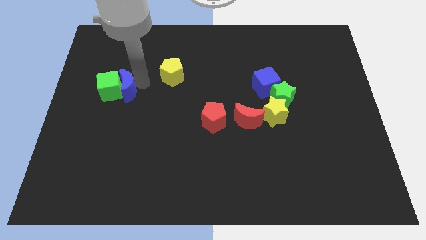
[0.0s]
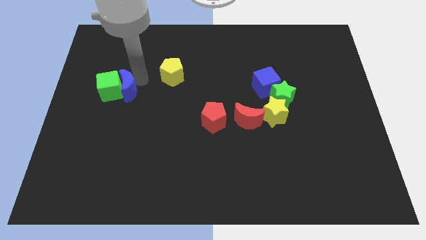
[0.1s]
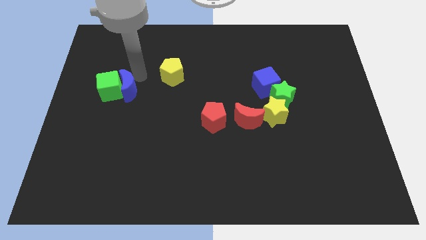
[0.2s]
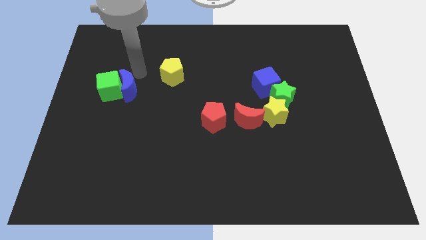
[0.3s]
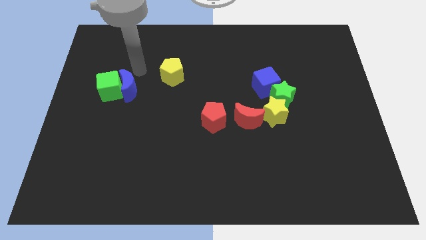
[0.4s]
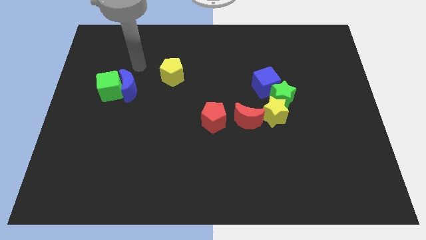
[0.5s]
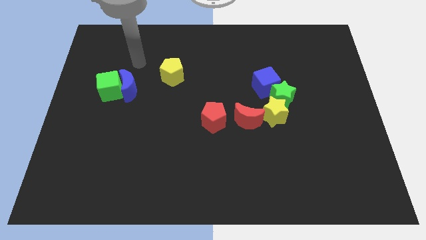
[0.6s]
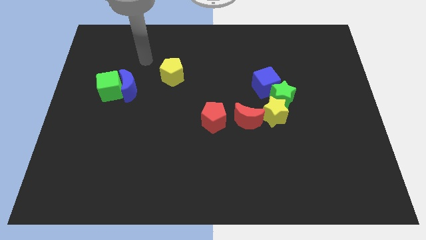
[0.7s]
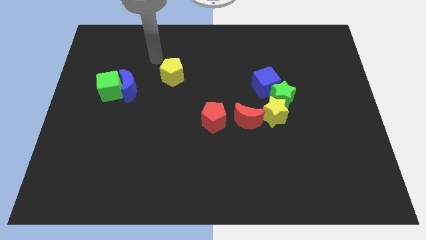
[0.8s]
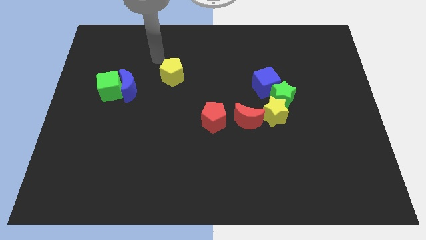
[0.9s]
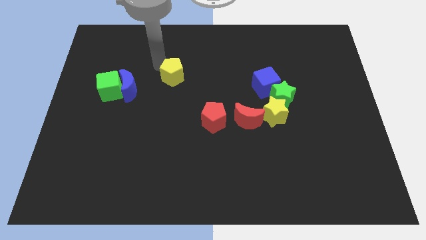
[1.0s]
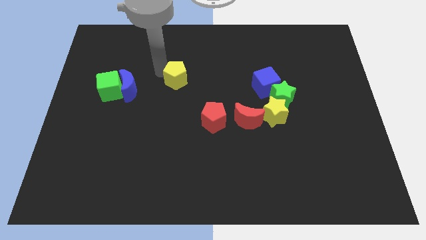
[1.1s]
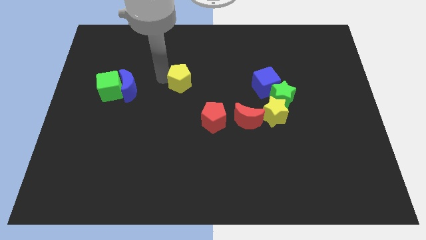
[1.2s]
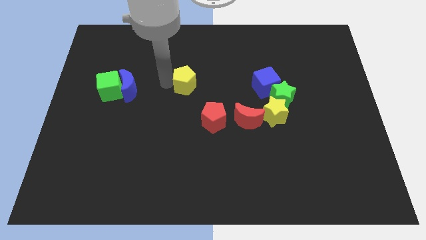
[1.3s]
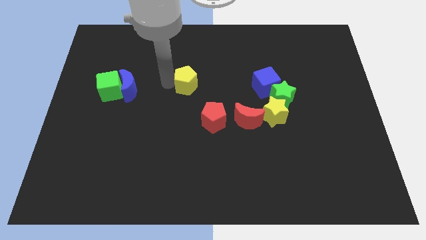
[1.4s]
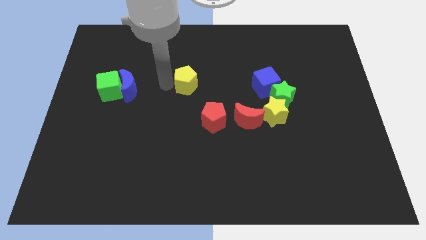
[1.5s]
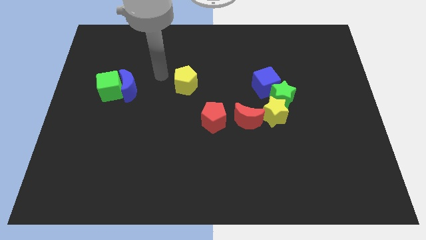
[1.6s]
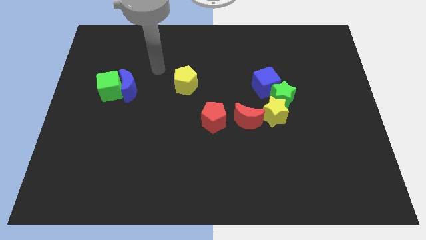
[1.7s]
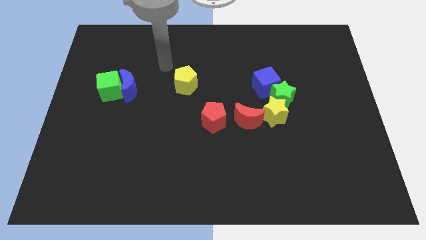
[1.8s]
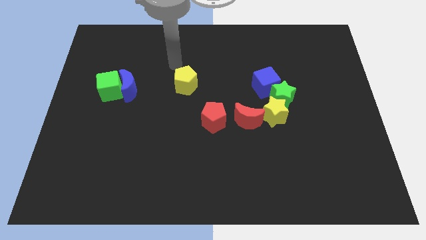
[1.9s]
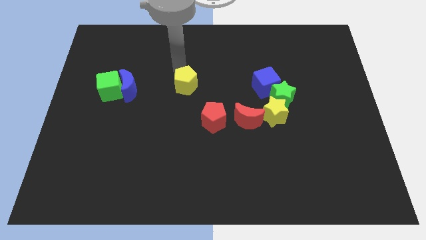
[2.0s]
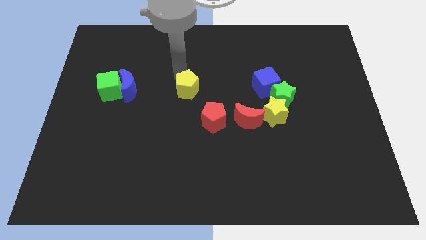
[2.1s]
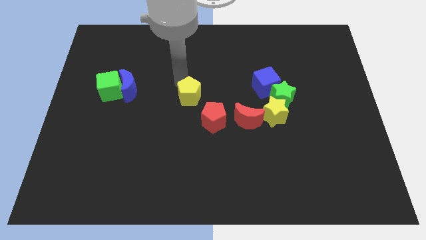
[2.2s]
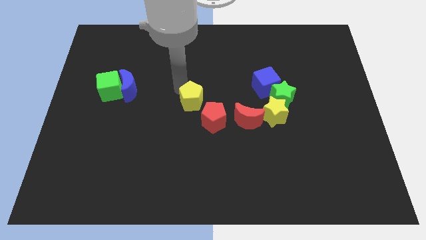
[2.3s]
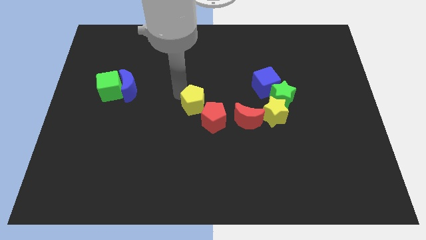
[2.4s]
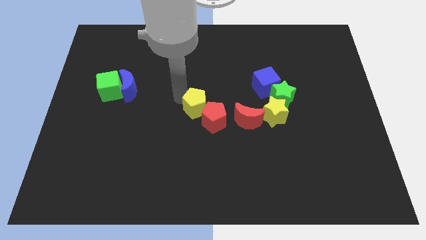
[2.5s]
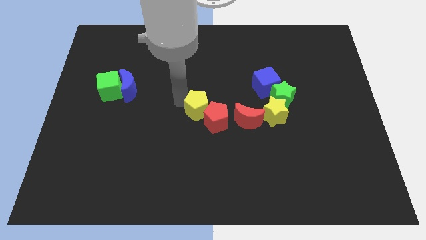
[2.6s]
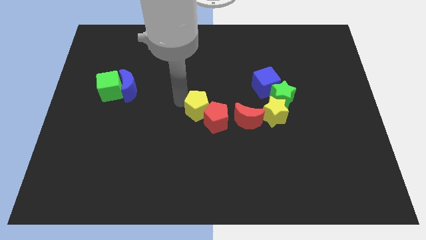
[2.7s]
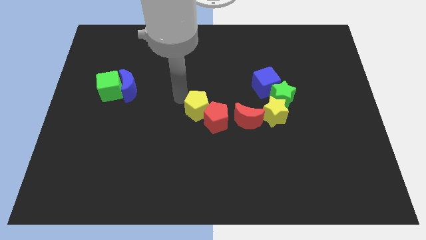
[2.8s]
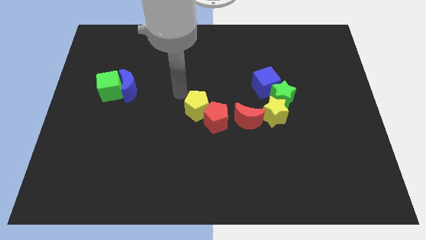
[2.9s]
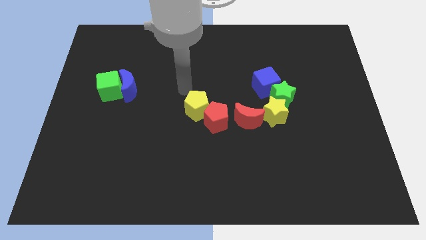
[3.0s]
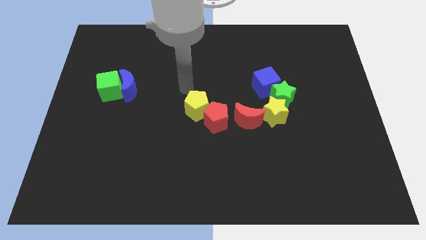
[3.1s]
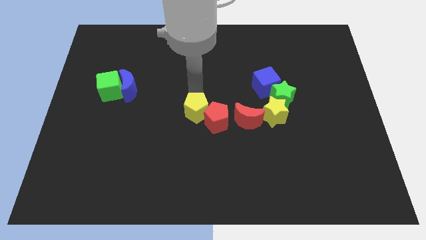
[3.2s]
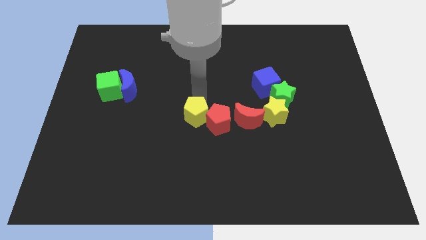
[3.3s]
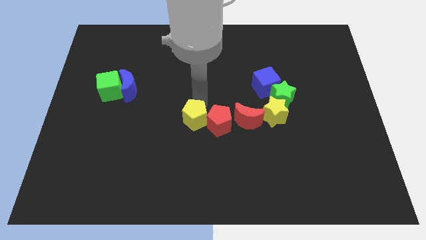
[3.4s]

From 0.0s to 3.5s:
drag the yellow pentagon into the left side of the red pentagon

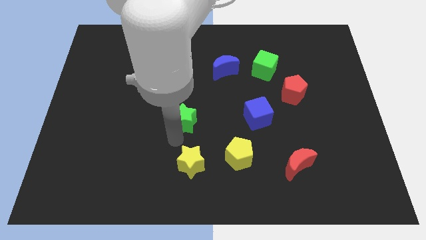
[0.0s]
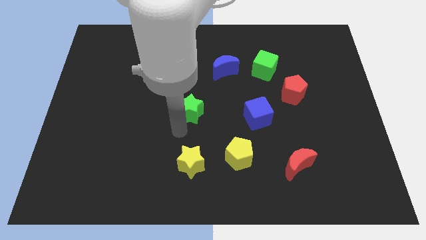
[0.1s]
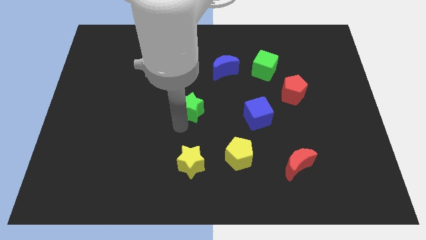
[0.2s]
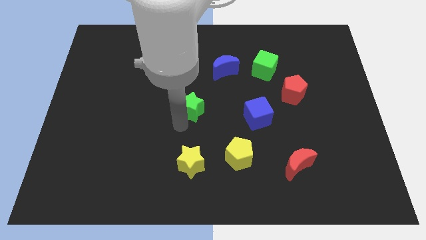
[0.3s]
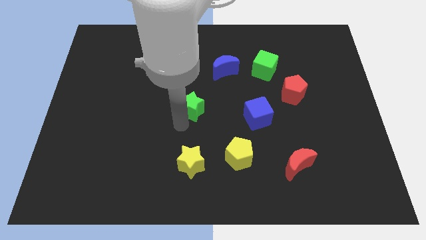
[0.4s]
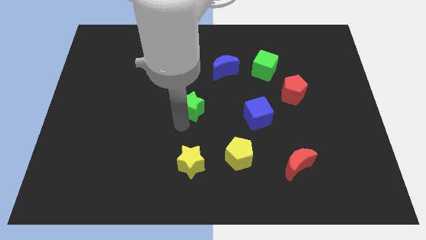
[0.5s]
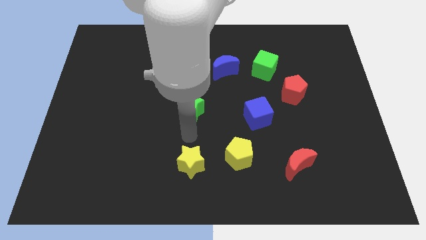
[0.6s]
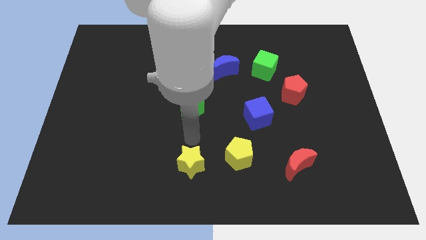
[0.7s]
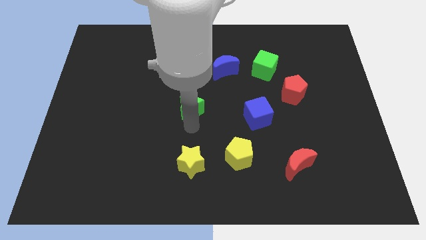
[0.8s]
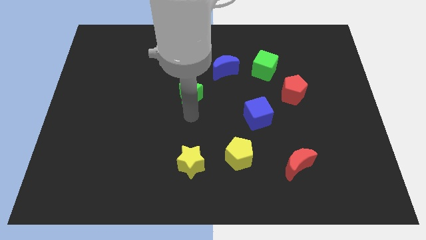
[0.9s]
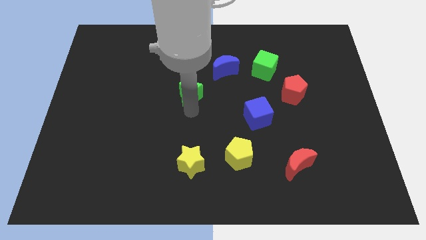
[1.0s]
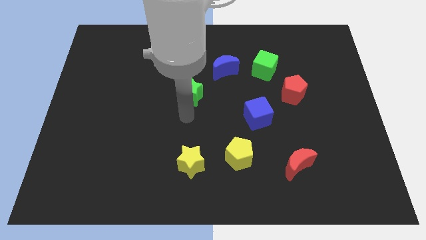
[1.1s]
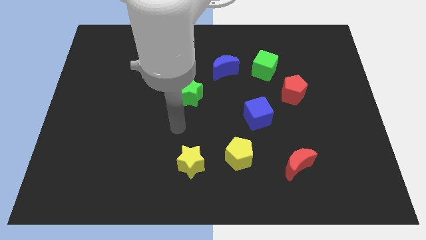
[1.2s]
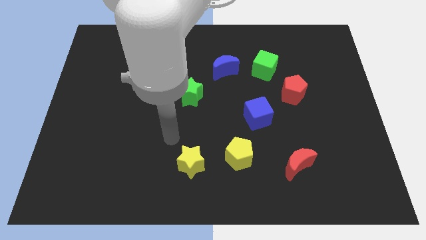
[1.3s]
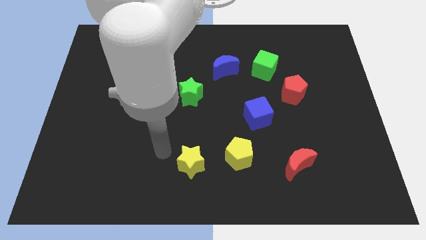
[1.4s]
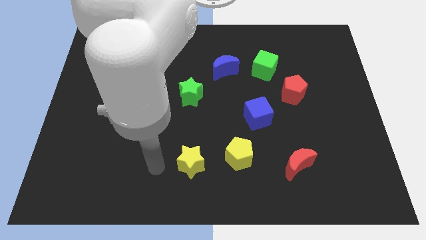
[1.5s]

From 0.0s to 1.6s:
push the green star diagnol to the blue crescent at the bottom left

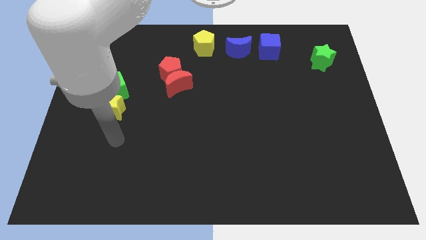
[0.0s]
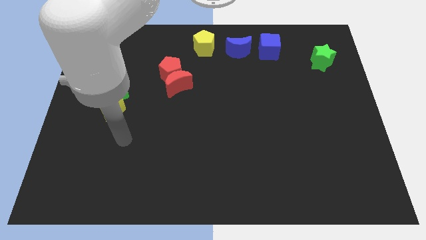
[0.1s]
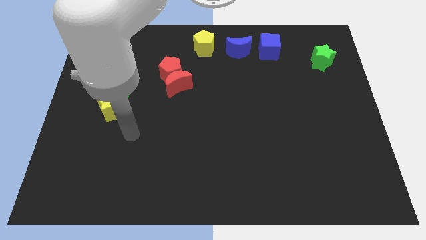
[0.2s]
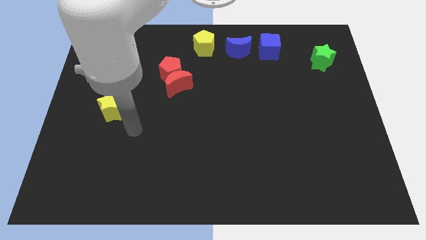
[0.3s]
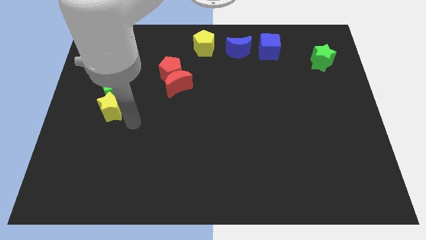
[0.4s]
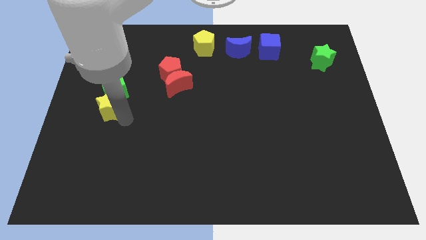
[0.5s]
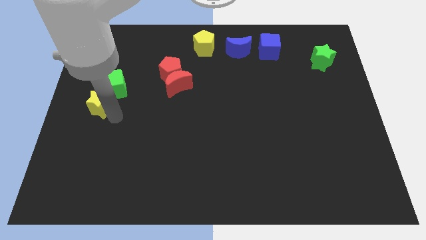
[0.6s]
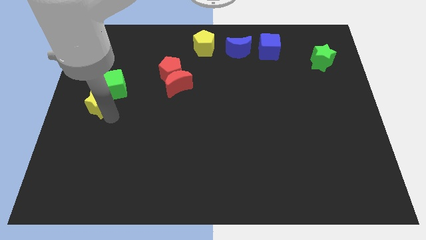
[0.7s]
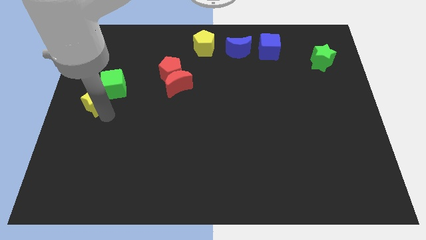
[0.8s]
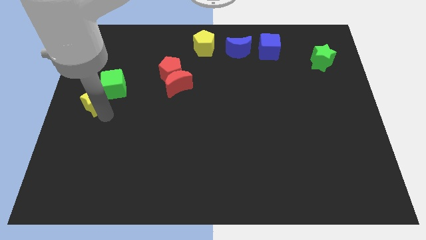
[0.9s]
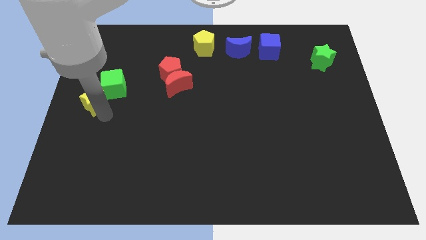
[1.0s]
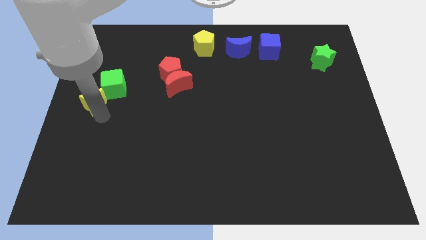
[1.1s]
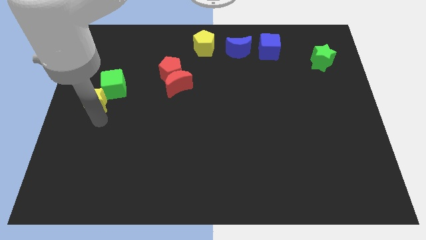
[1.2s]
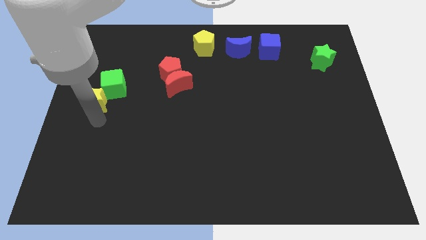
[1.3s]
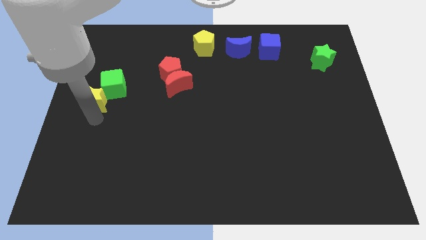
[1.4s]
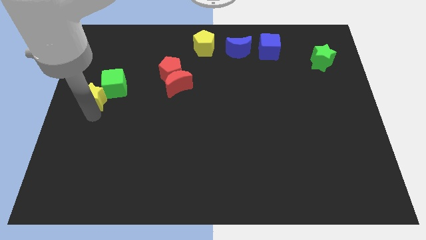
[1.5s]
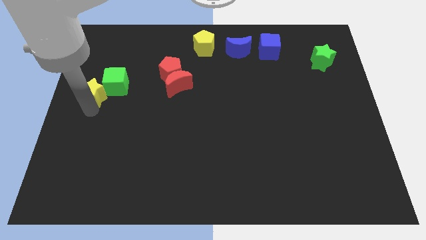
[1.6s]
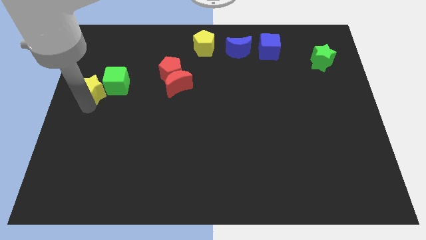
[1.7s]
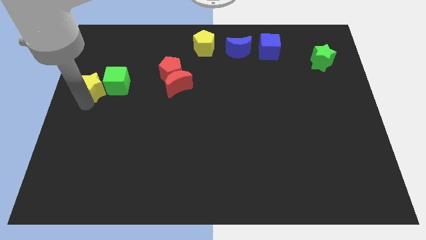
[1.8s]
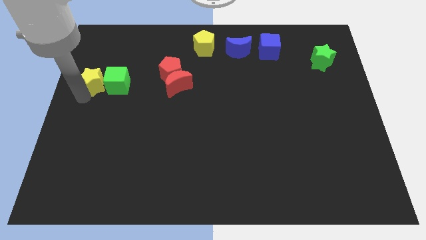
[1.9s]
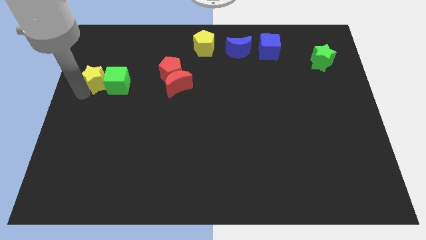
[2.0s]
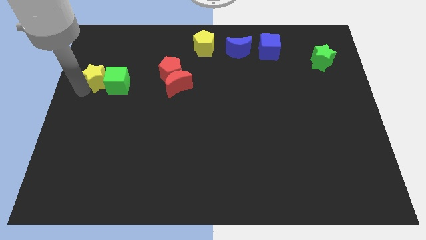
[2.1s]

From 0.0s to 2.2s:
move the yellow star to the left of the green cube

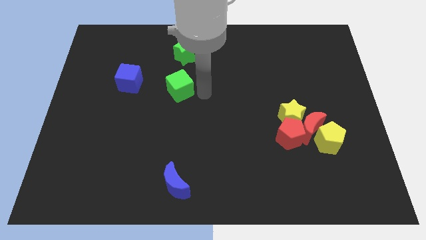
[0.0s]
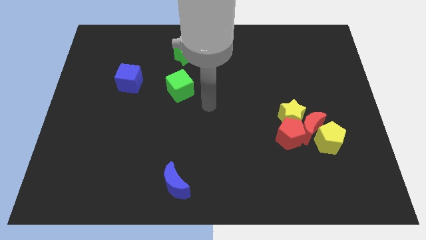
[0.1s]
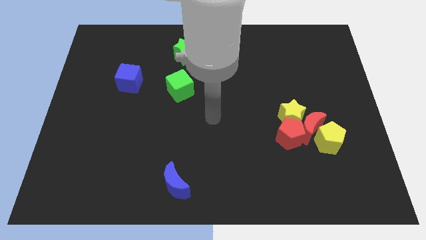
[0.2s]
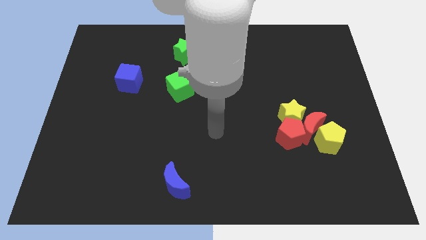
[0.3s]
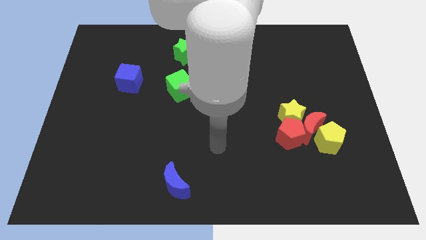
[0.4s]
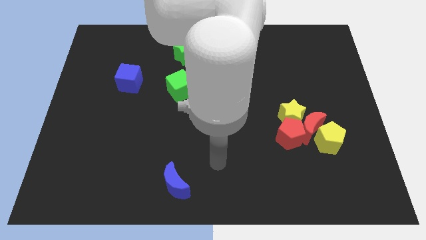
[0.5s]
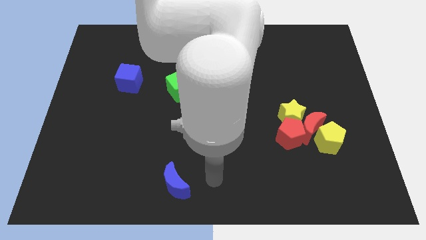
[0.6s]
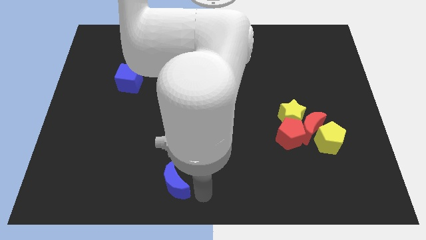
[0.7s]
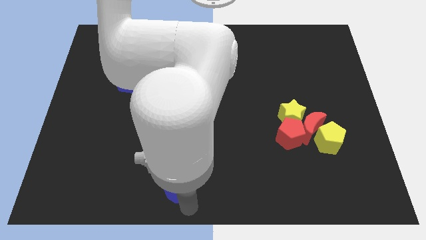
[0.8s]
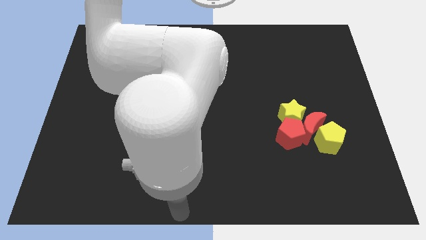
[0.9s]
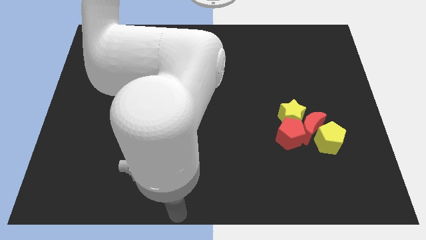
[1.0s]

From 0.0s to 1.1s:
move your arm to the bottom of the blue crescent

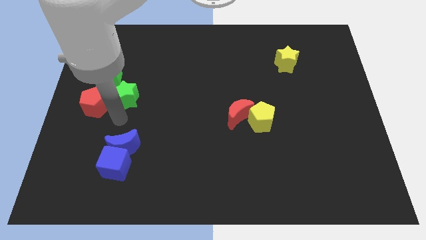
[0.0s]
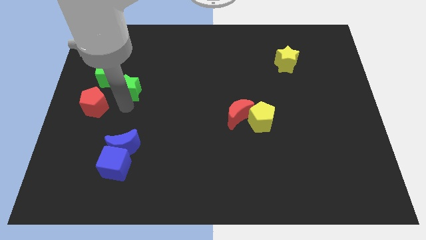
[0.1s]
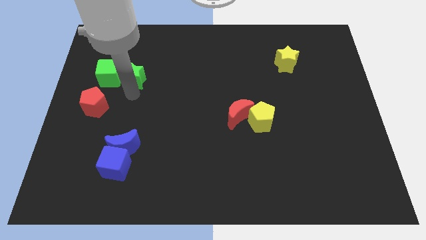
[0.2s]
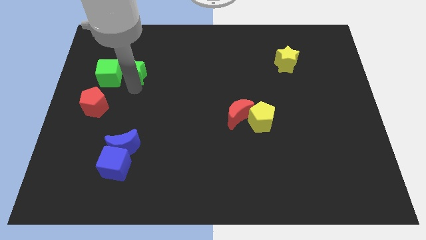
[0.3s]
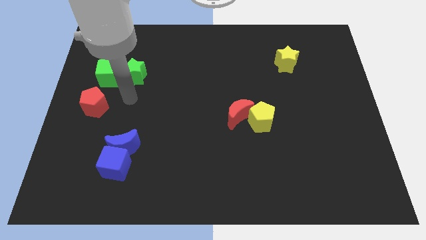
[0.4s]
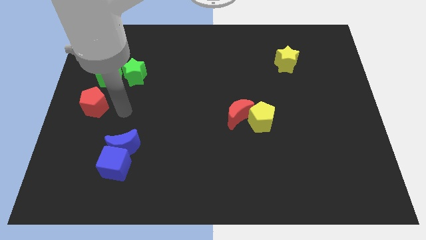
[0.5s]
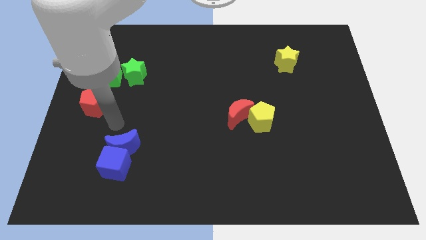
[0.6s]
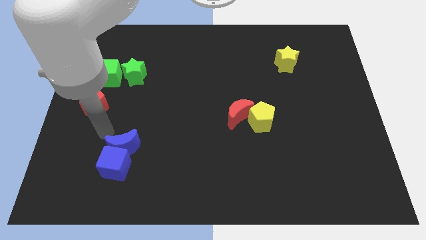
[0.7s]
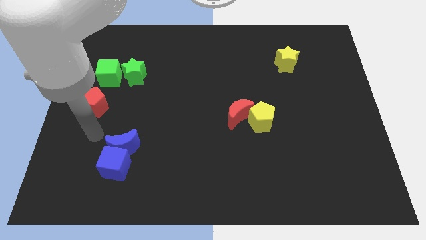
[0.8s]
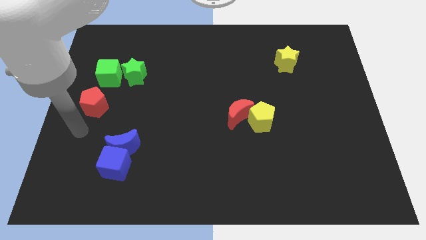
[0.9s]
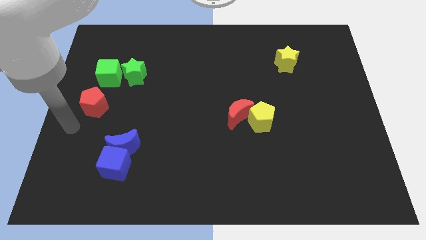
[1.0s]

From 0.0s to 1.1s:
push green star right to green cube
